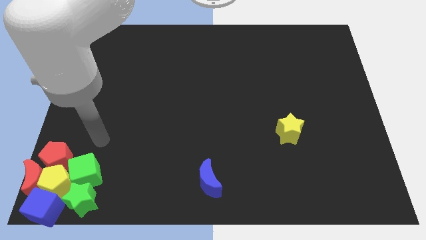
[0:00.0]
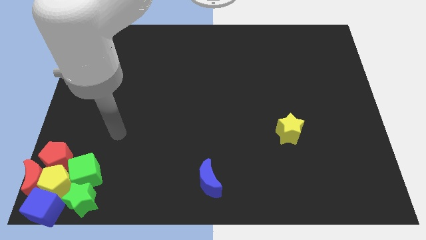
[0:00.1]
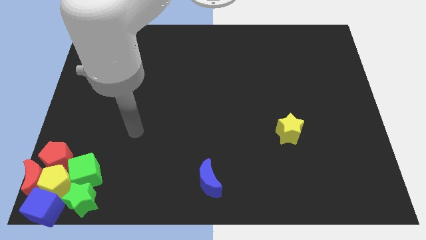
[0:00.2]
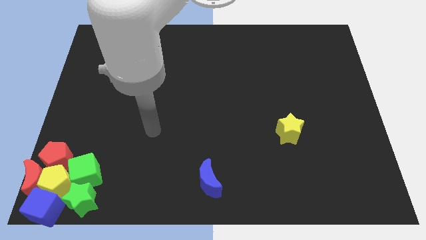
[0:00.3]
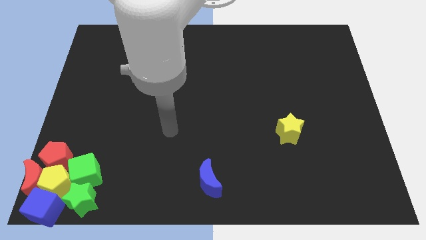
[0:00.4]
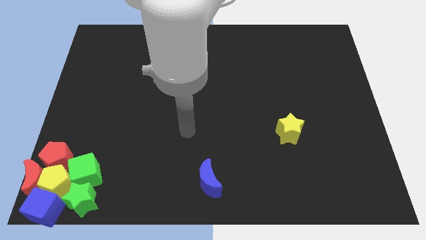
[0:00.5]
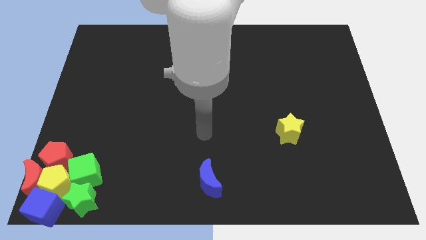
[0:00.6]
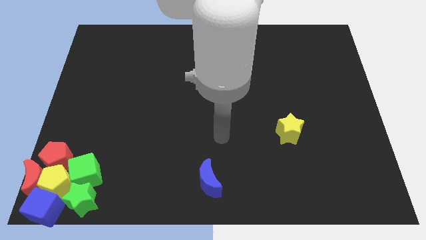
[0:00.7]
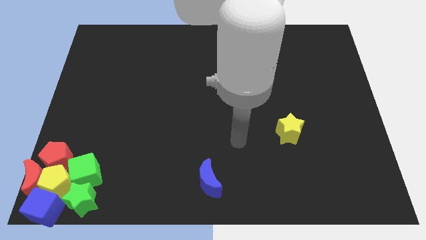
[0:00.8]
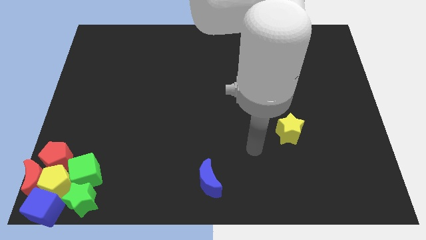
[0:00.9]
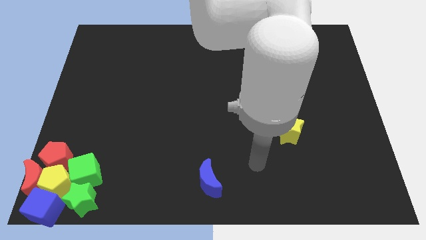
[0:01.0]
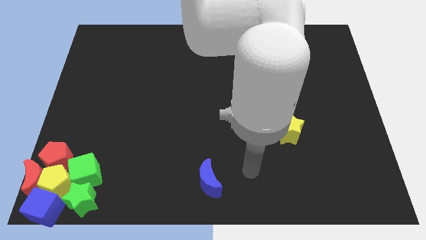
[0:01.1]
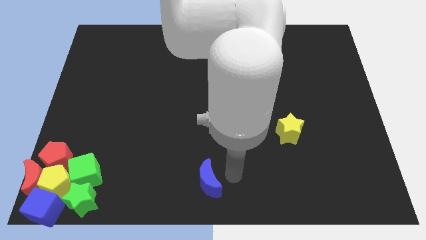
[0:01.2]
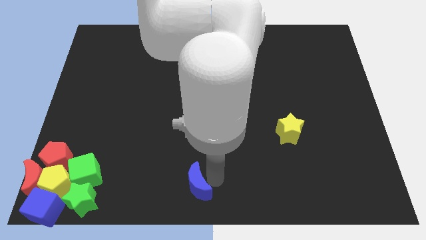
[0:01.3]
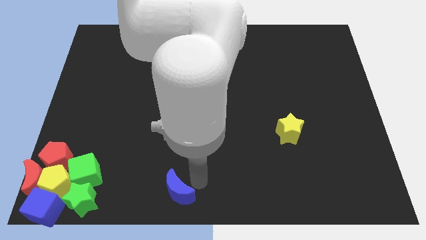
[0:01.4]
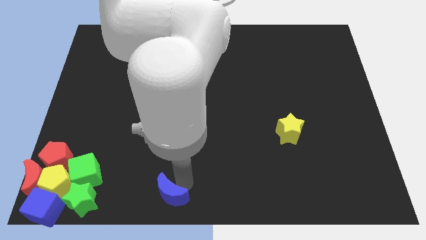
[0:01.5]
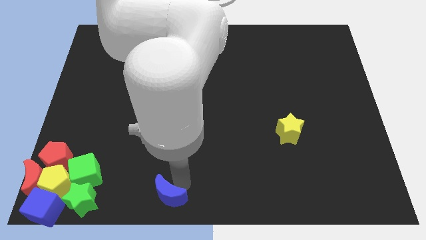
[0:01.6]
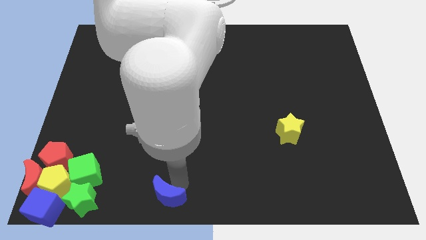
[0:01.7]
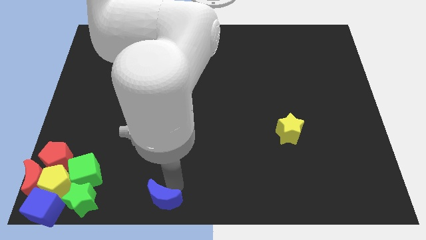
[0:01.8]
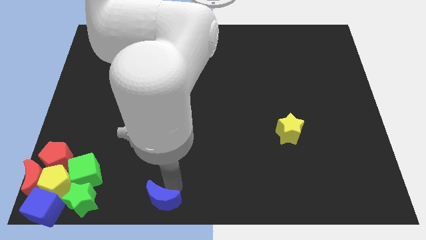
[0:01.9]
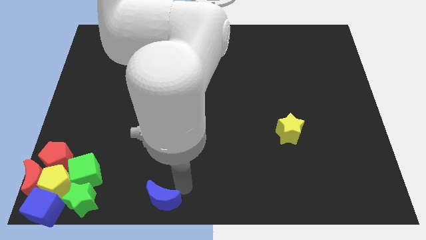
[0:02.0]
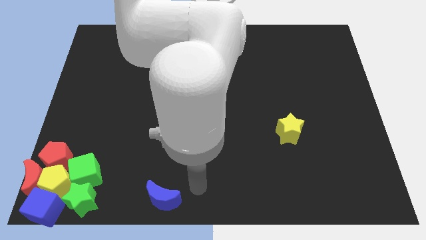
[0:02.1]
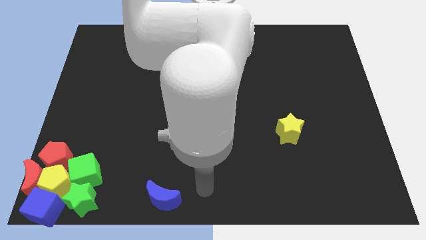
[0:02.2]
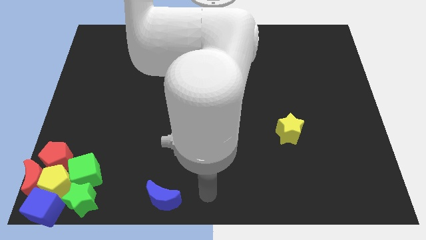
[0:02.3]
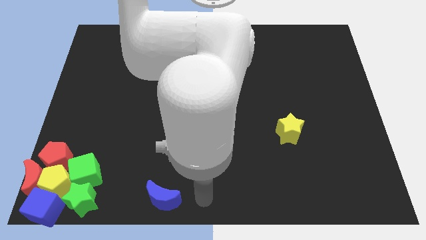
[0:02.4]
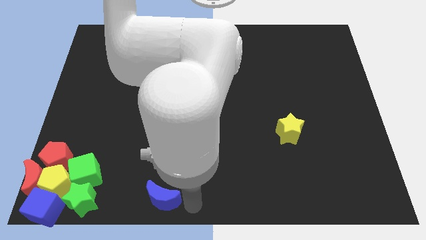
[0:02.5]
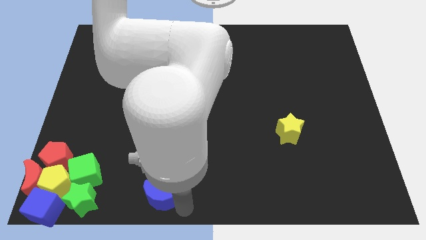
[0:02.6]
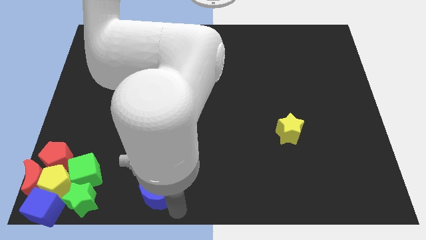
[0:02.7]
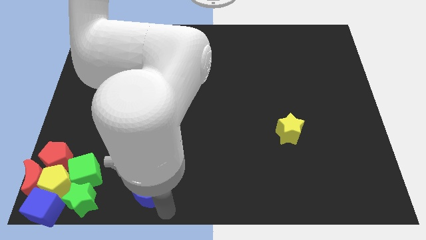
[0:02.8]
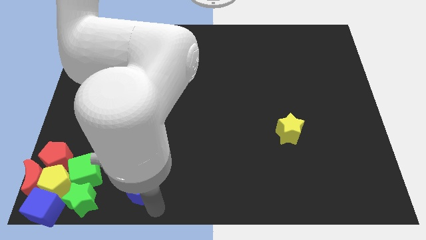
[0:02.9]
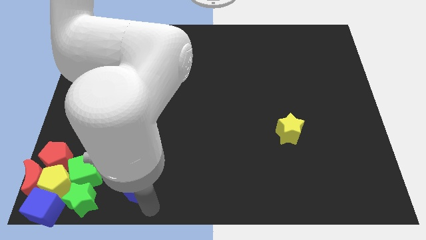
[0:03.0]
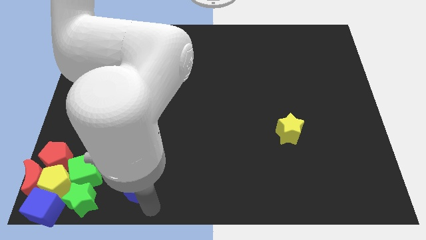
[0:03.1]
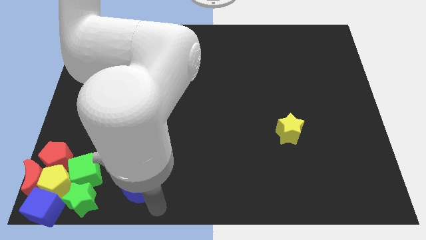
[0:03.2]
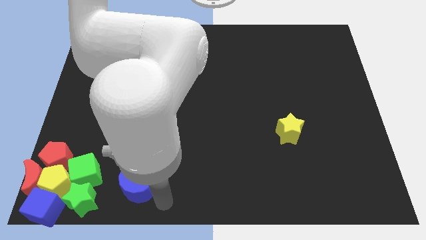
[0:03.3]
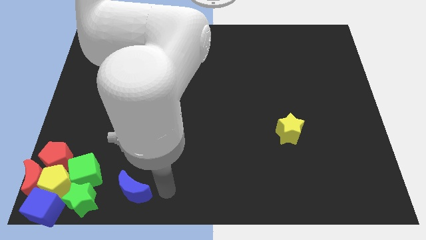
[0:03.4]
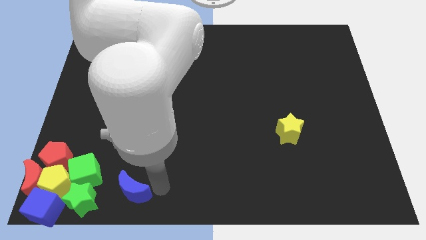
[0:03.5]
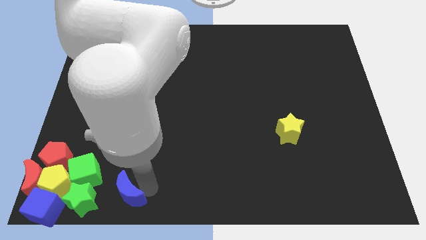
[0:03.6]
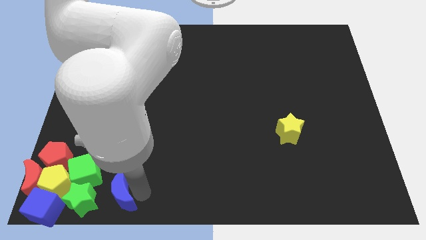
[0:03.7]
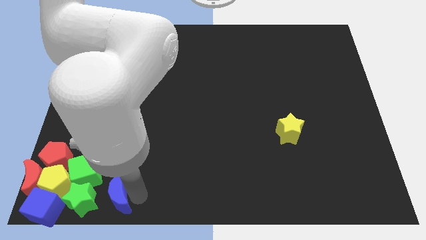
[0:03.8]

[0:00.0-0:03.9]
push the blue crescent to the right of the green star

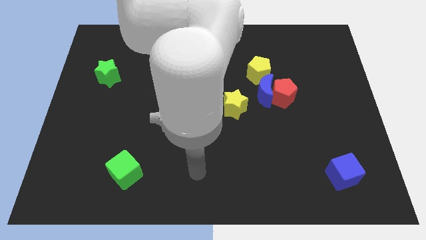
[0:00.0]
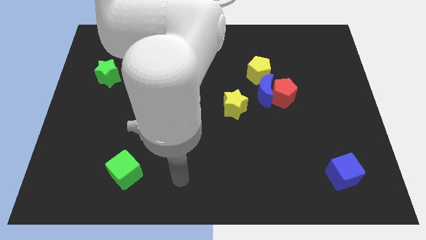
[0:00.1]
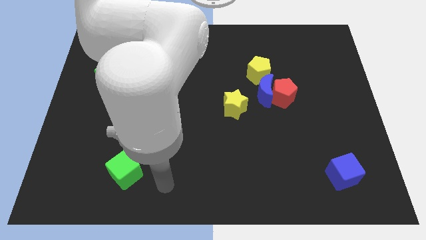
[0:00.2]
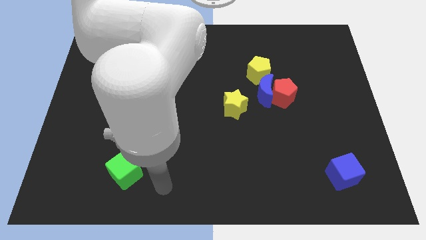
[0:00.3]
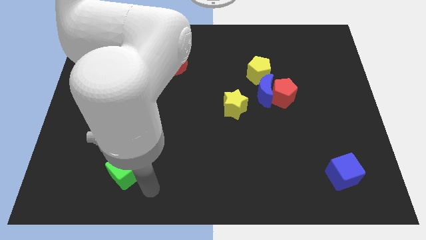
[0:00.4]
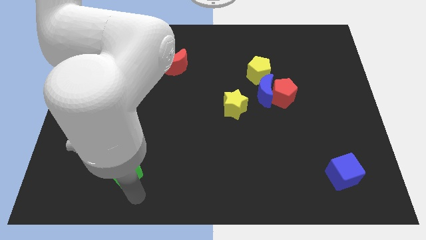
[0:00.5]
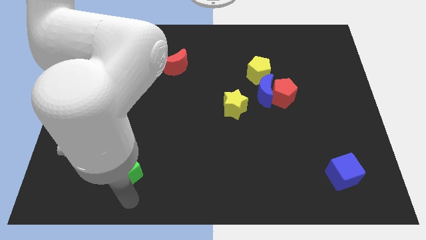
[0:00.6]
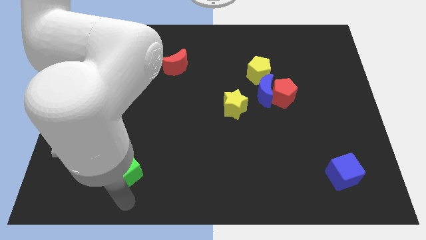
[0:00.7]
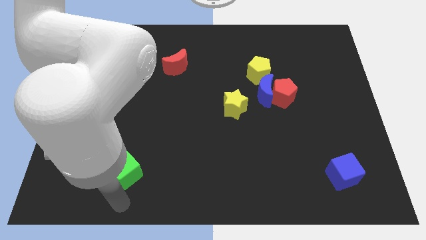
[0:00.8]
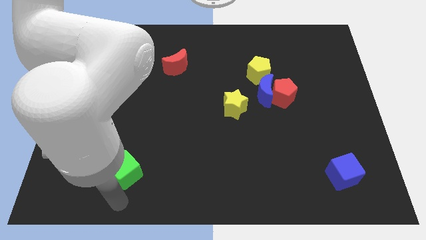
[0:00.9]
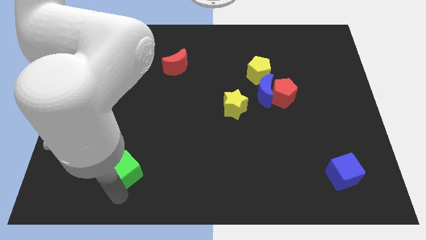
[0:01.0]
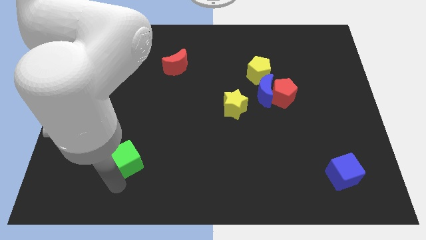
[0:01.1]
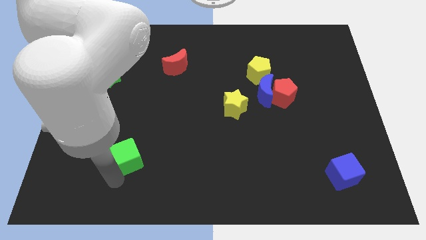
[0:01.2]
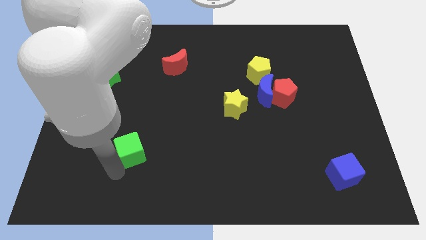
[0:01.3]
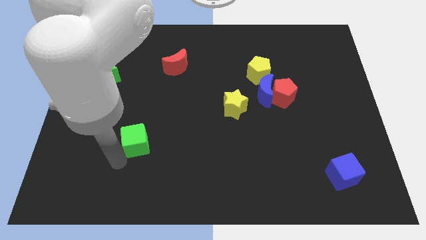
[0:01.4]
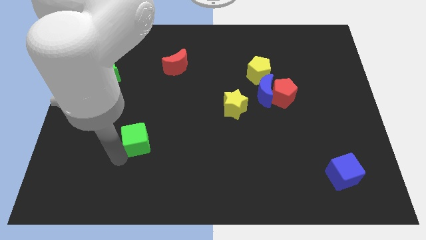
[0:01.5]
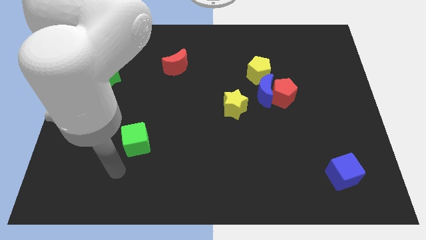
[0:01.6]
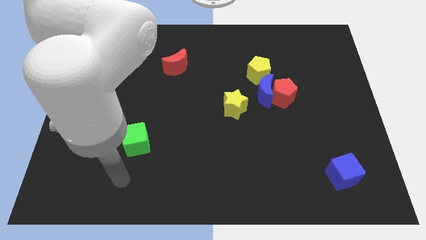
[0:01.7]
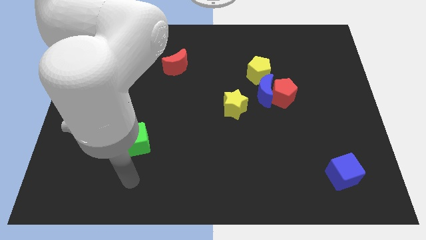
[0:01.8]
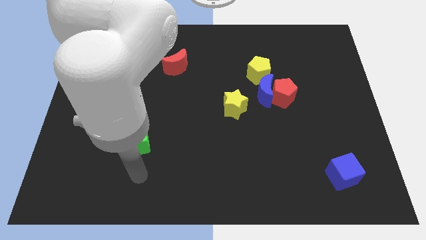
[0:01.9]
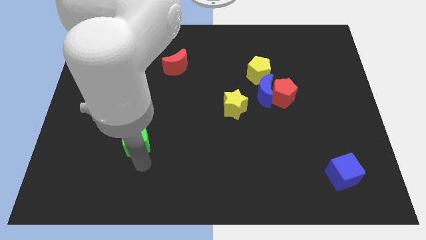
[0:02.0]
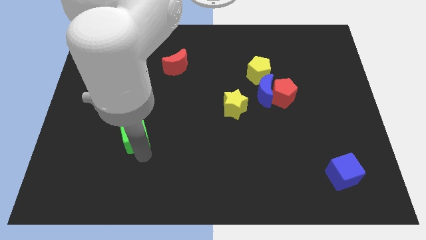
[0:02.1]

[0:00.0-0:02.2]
push the green cube slightly to the top

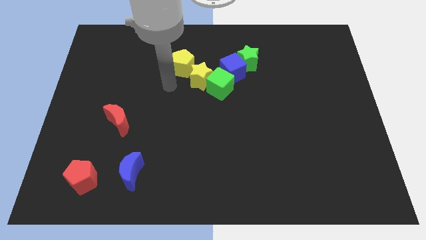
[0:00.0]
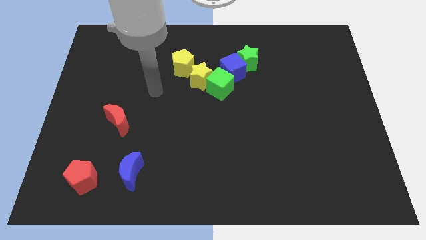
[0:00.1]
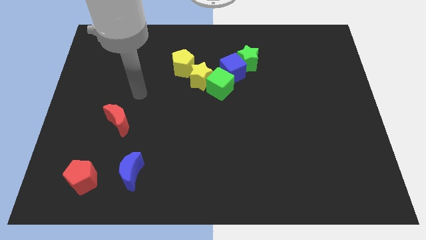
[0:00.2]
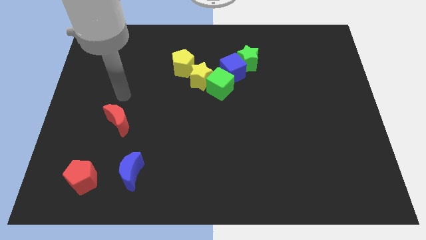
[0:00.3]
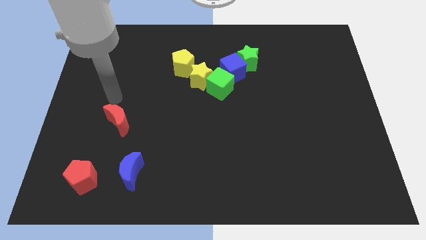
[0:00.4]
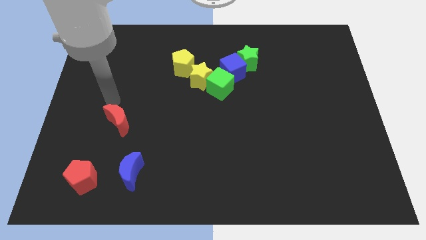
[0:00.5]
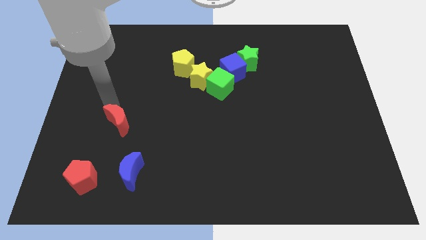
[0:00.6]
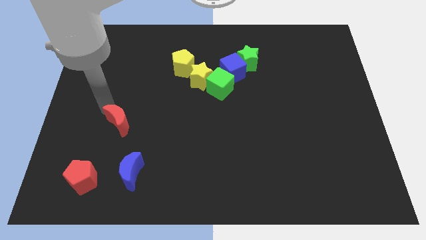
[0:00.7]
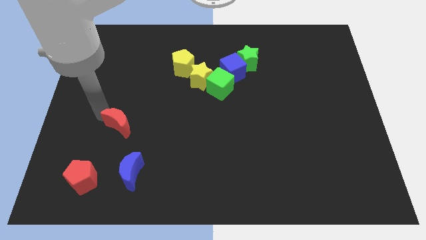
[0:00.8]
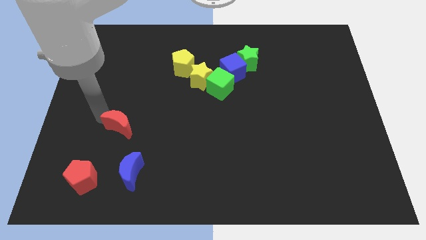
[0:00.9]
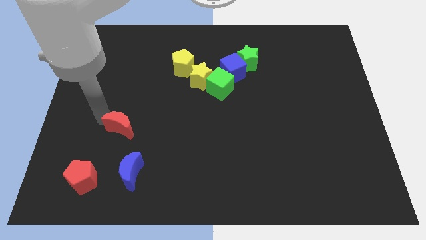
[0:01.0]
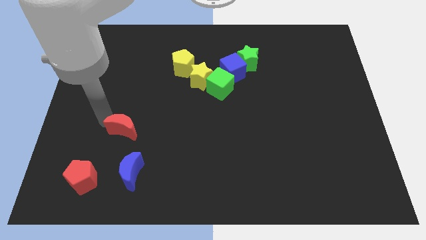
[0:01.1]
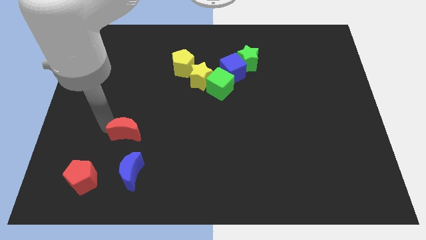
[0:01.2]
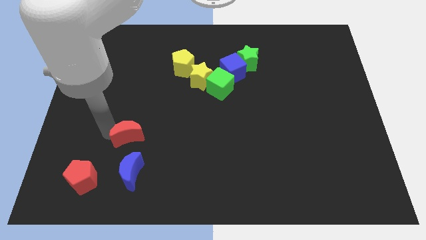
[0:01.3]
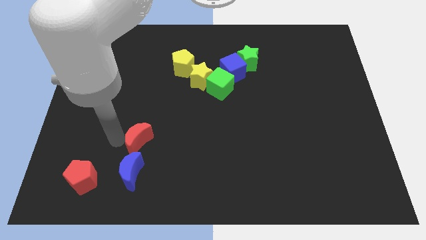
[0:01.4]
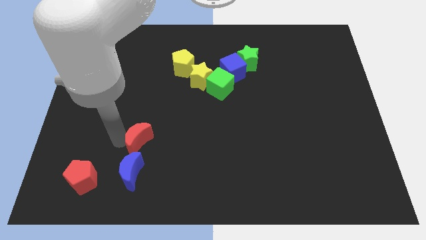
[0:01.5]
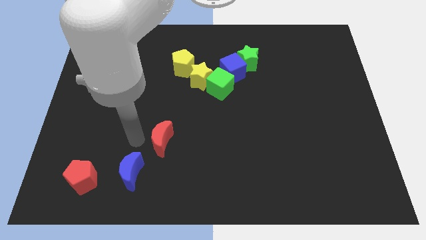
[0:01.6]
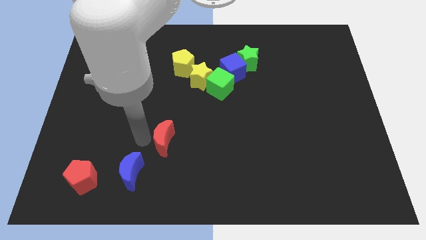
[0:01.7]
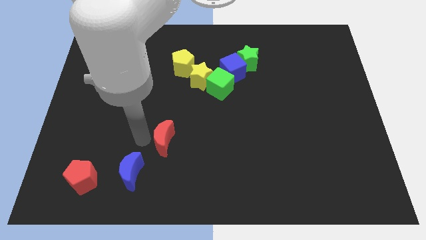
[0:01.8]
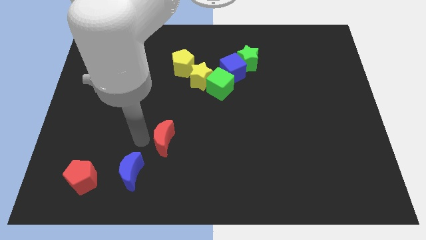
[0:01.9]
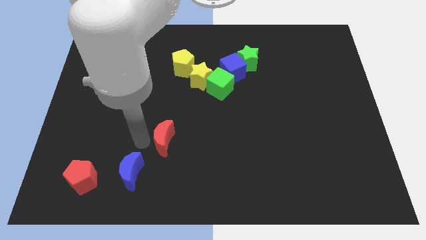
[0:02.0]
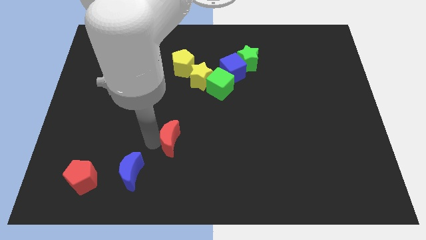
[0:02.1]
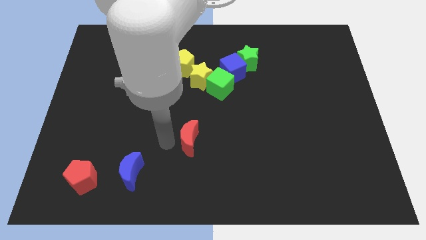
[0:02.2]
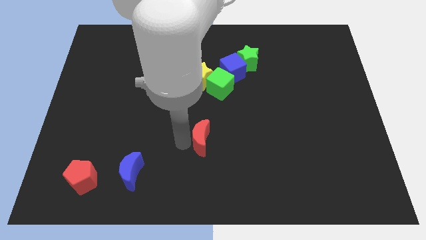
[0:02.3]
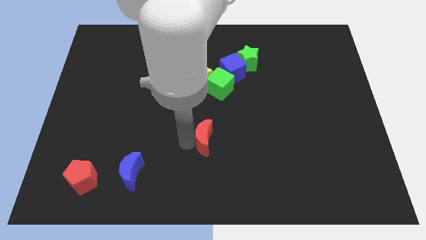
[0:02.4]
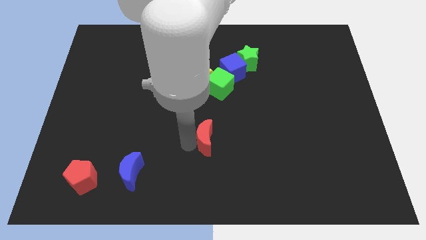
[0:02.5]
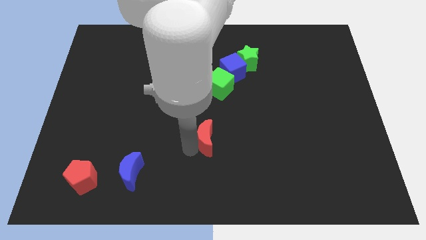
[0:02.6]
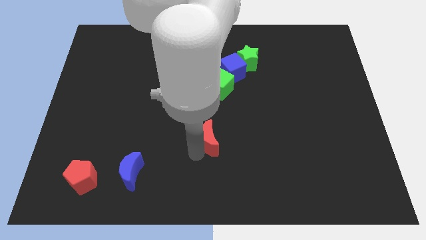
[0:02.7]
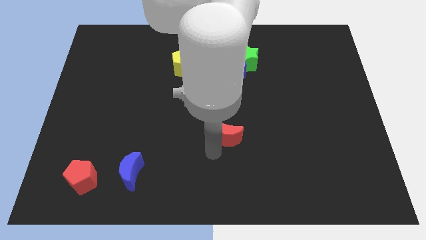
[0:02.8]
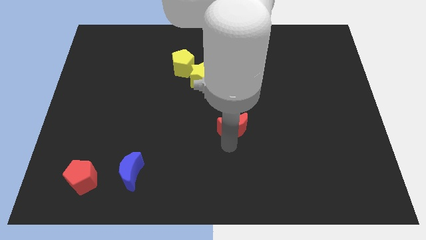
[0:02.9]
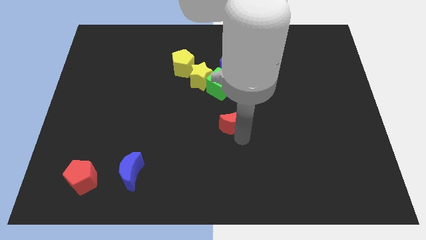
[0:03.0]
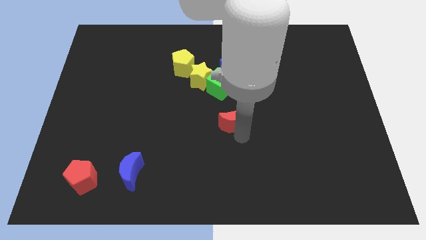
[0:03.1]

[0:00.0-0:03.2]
move the red crescent towards the bottom of the green cube
